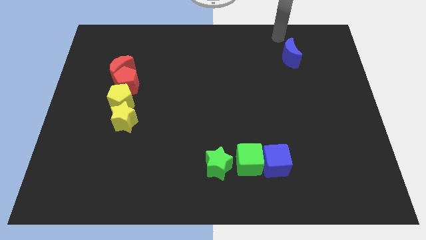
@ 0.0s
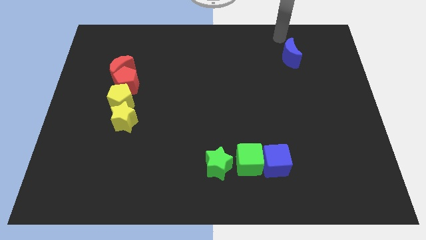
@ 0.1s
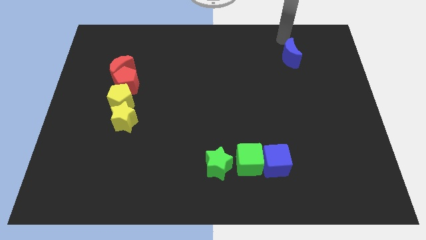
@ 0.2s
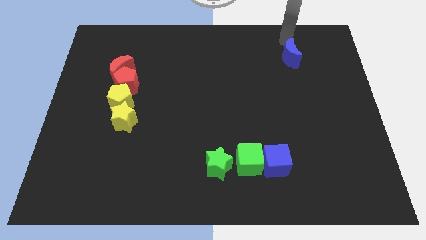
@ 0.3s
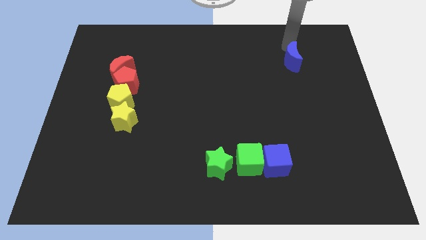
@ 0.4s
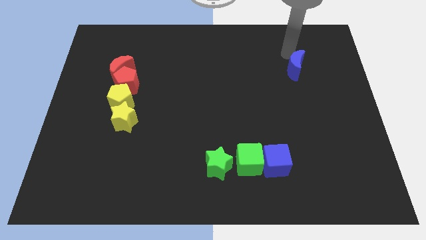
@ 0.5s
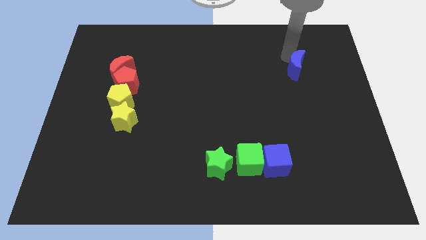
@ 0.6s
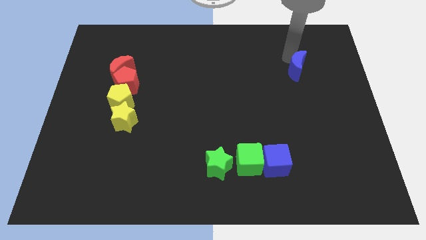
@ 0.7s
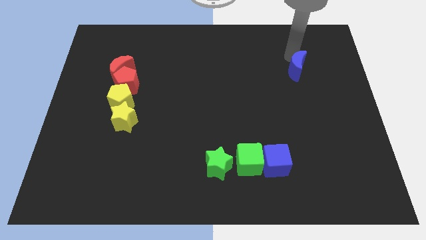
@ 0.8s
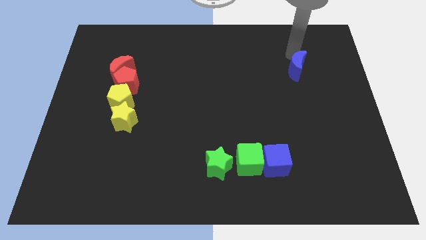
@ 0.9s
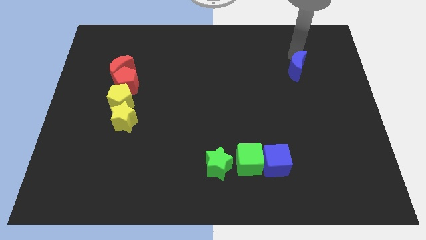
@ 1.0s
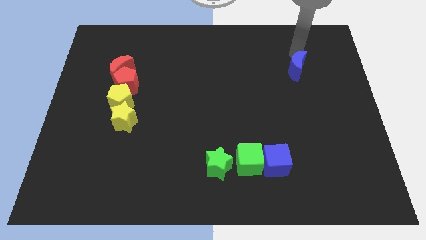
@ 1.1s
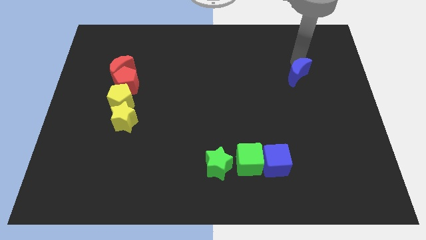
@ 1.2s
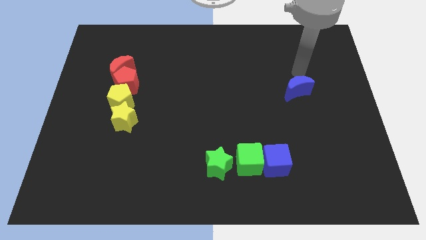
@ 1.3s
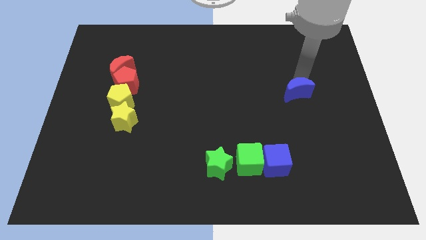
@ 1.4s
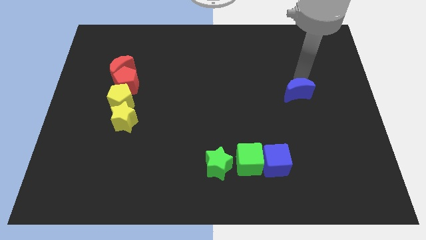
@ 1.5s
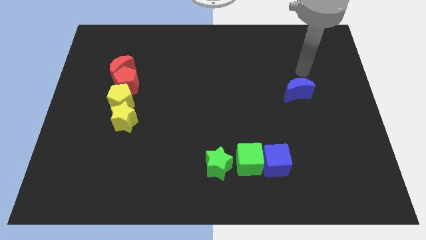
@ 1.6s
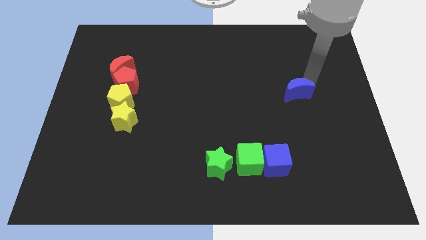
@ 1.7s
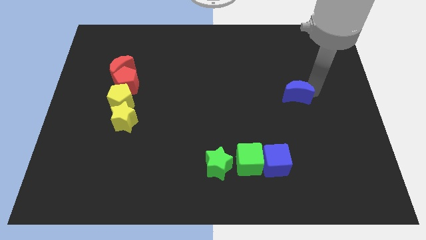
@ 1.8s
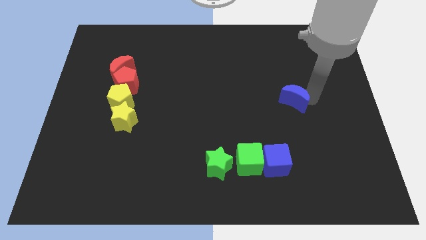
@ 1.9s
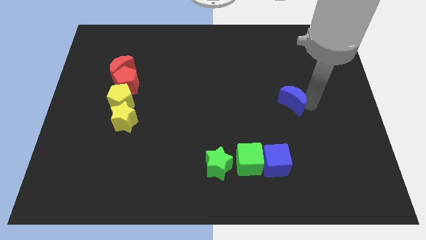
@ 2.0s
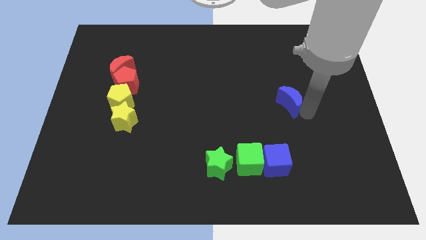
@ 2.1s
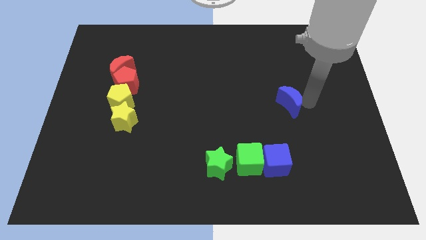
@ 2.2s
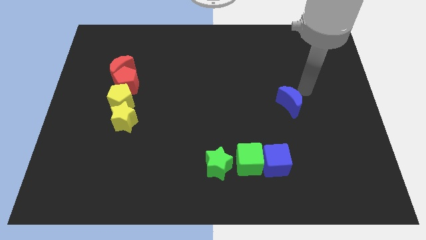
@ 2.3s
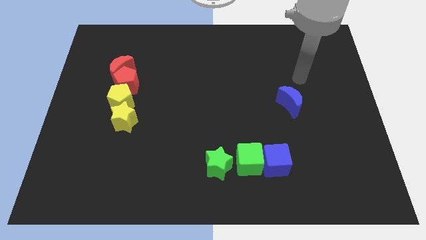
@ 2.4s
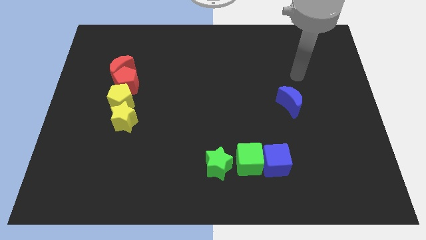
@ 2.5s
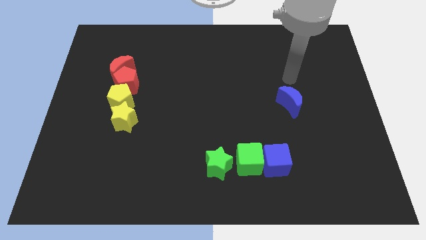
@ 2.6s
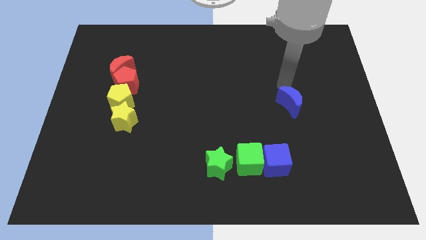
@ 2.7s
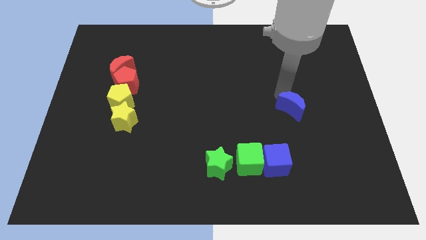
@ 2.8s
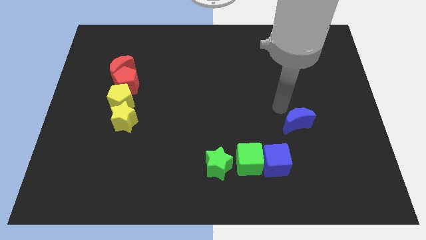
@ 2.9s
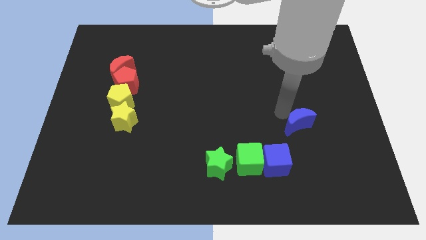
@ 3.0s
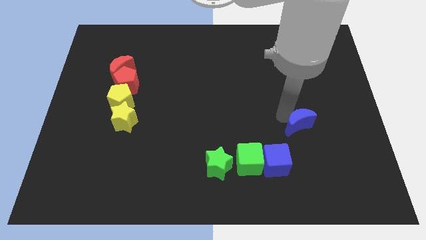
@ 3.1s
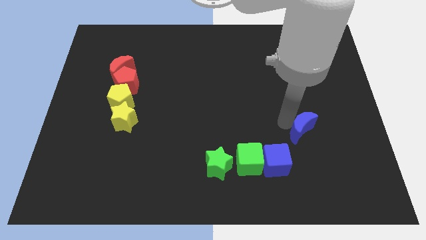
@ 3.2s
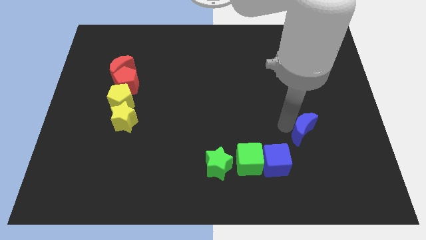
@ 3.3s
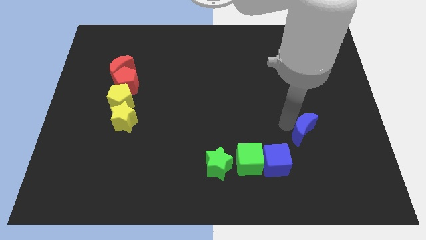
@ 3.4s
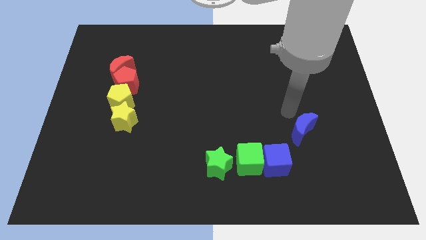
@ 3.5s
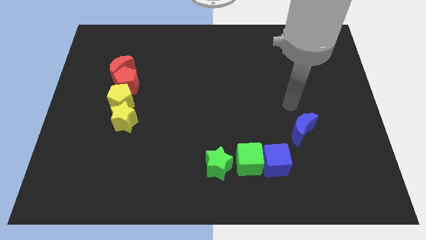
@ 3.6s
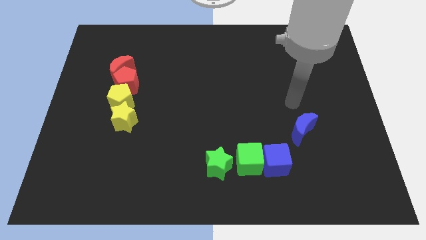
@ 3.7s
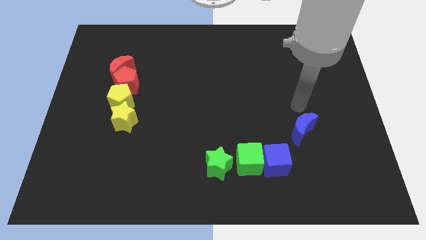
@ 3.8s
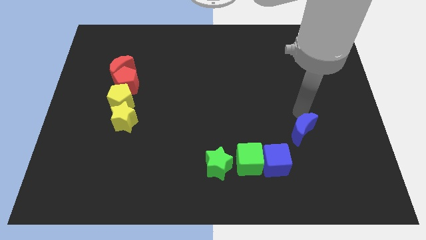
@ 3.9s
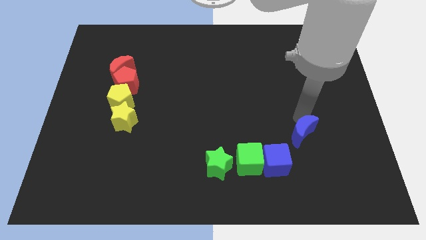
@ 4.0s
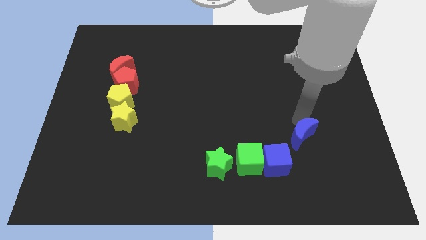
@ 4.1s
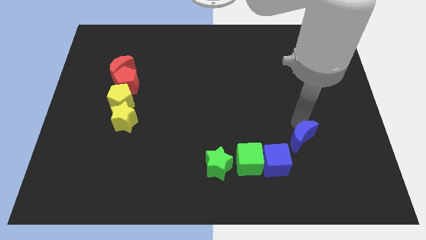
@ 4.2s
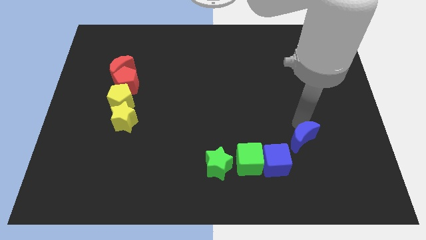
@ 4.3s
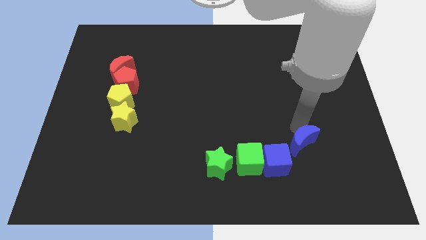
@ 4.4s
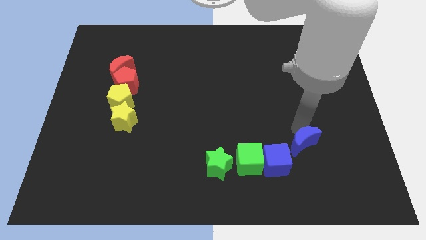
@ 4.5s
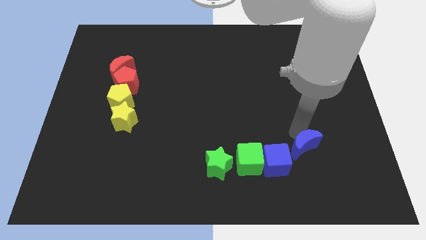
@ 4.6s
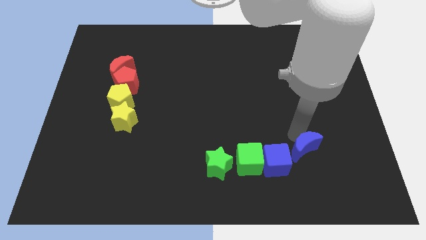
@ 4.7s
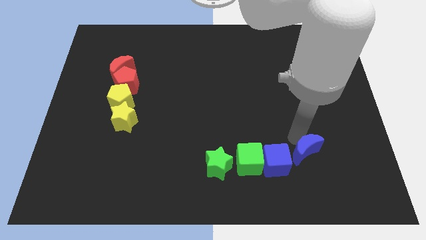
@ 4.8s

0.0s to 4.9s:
place blue crescent to the right of blue cube

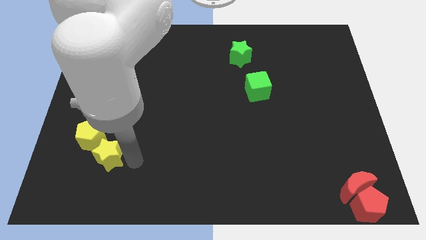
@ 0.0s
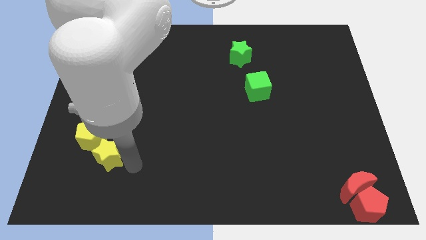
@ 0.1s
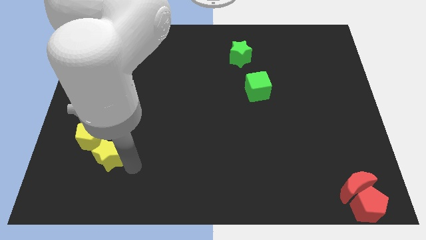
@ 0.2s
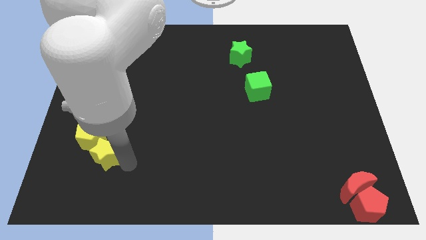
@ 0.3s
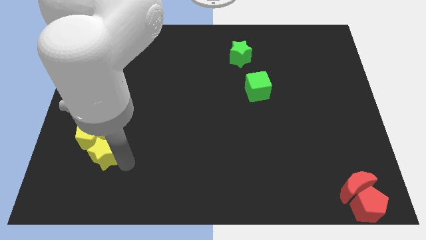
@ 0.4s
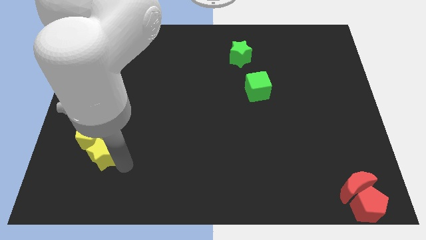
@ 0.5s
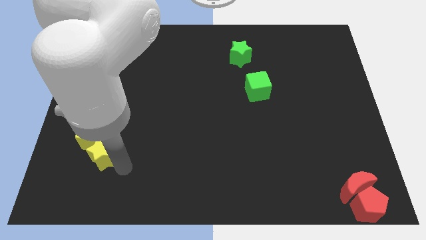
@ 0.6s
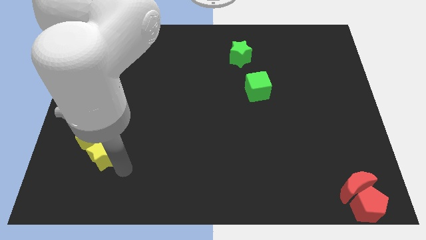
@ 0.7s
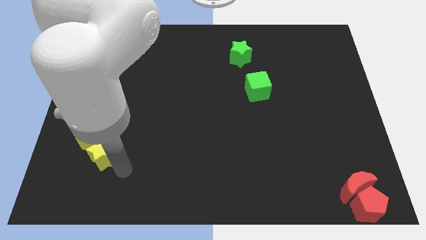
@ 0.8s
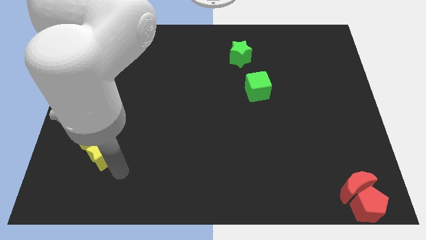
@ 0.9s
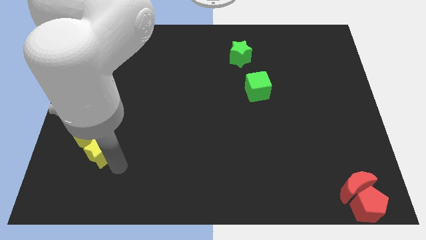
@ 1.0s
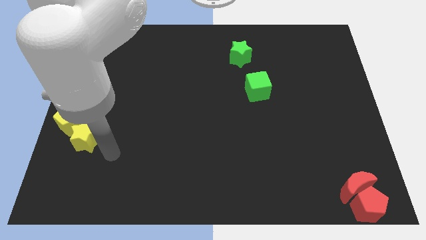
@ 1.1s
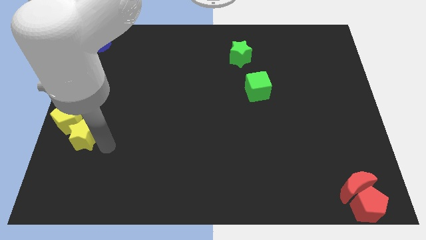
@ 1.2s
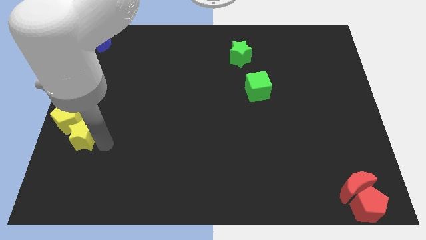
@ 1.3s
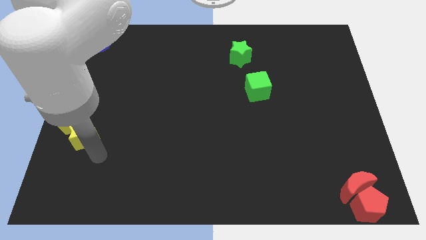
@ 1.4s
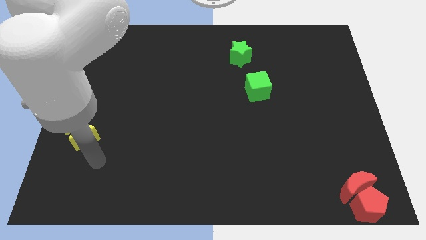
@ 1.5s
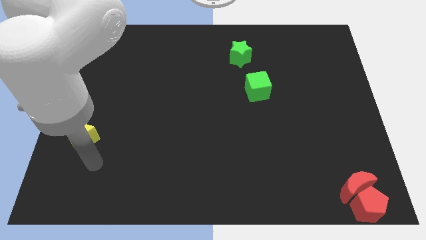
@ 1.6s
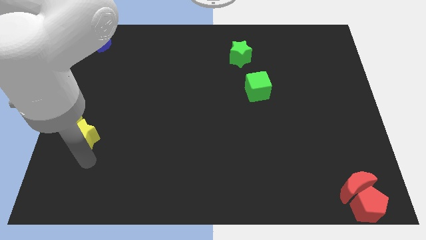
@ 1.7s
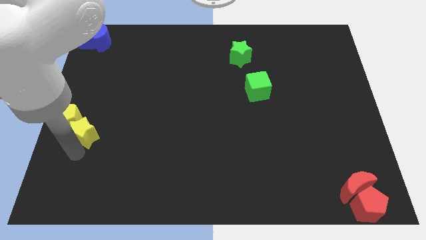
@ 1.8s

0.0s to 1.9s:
drag the yellow star into the yellow pentagon to the center left

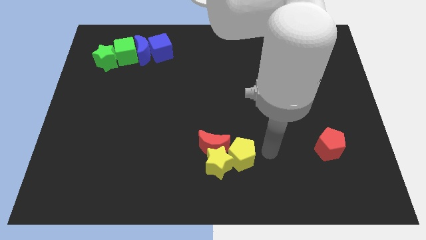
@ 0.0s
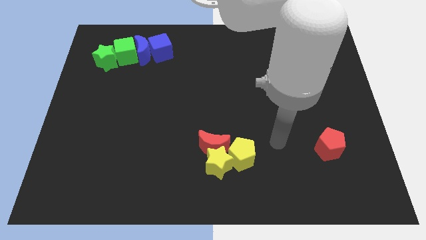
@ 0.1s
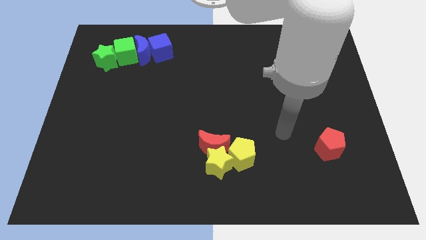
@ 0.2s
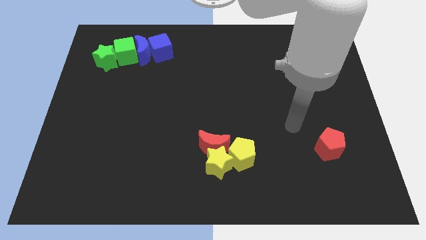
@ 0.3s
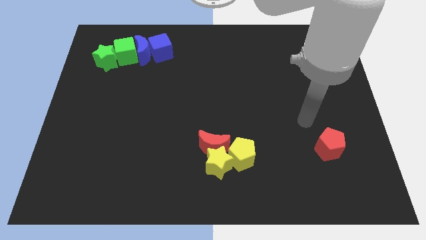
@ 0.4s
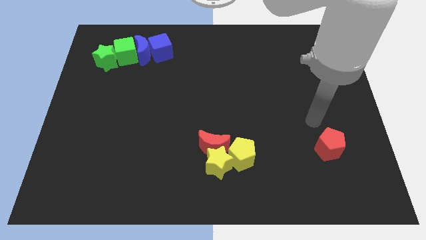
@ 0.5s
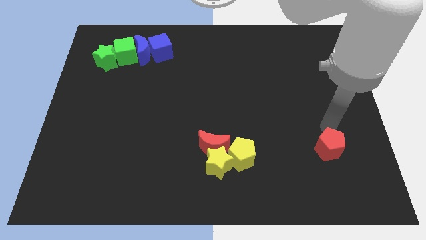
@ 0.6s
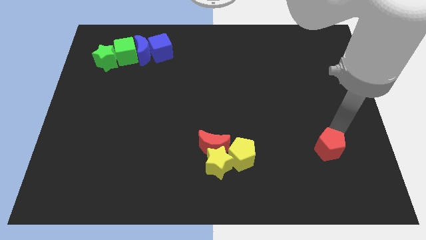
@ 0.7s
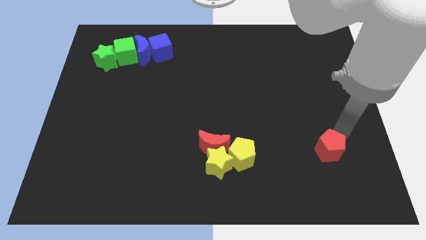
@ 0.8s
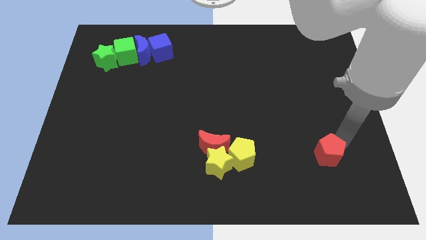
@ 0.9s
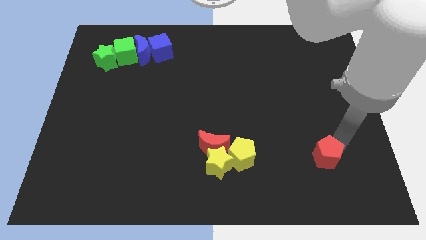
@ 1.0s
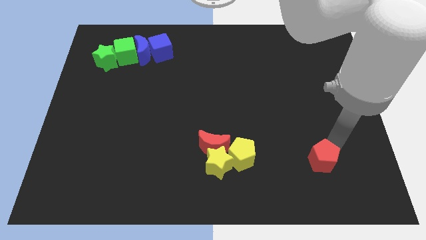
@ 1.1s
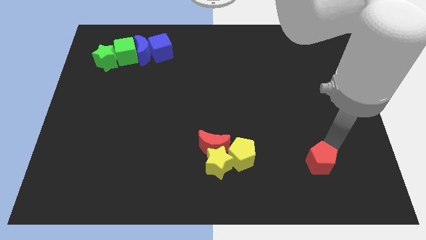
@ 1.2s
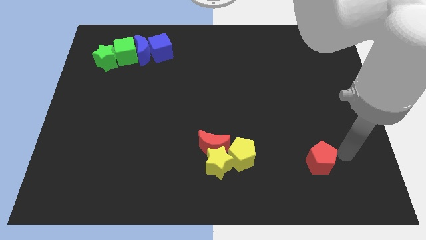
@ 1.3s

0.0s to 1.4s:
put the red pentagon horizontally to the right side of the yellow pentagon

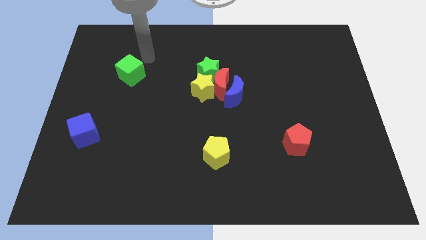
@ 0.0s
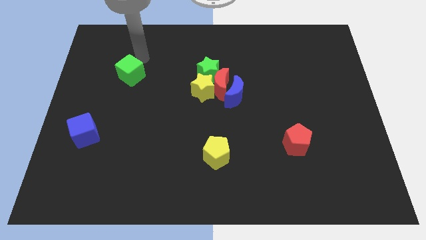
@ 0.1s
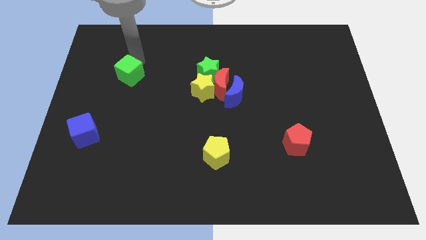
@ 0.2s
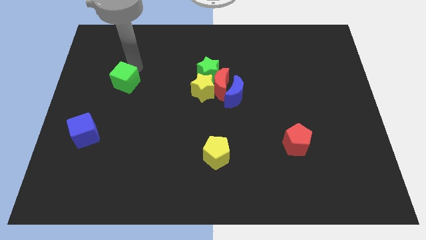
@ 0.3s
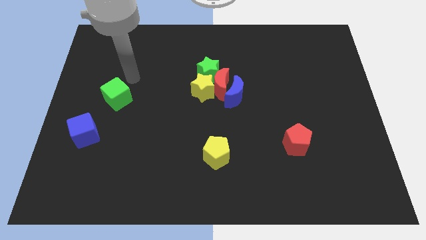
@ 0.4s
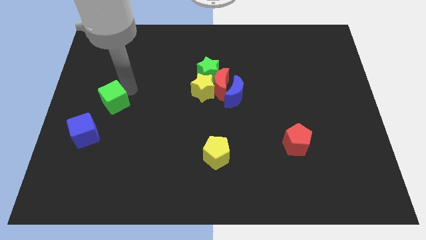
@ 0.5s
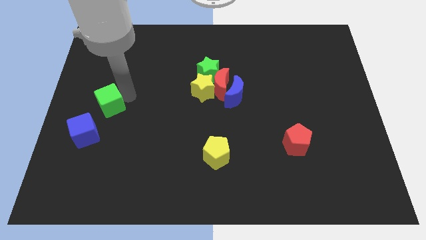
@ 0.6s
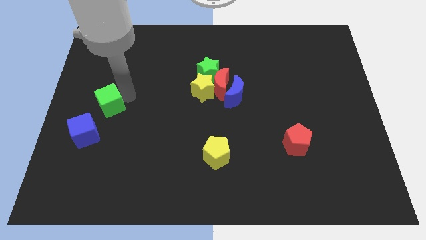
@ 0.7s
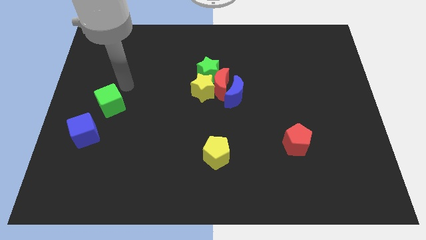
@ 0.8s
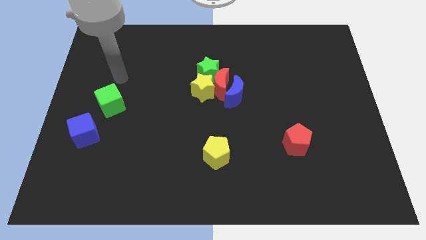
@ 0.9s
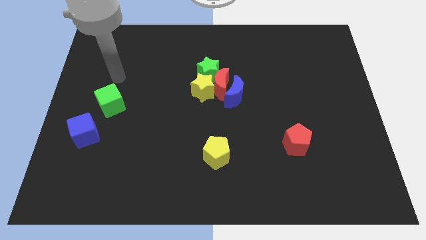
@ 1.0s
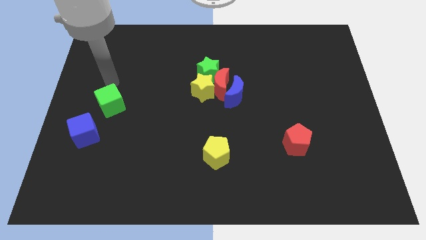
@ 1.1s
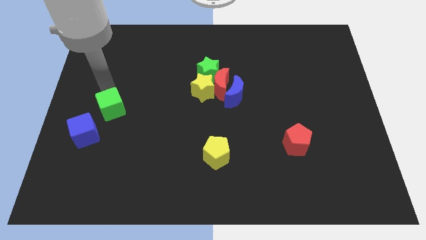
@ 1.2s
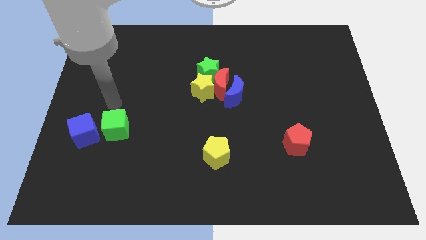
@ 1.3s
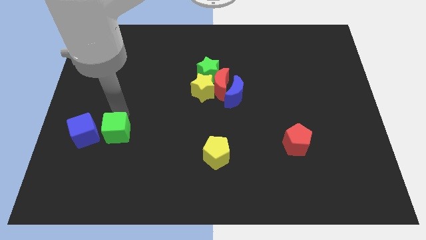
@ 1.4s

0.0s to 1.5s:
place green cube right to blue cube
